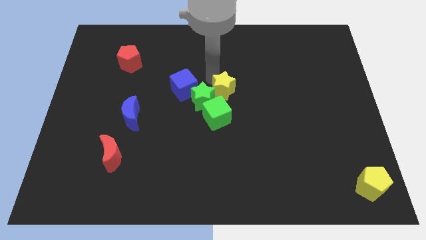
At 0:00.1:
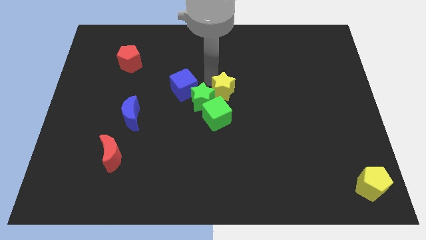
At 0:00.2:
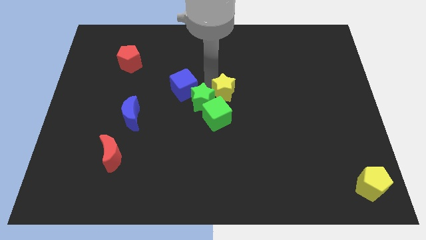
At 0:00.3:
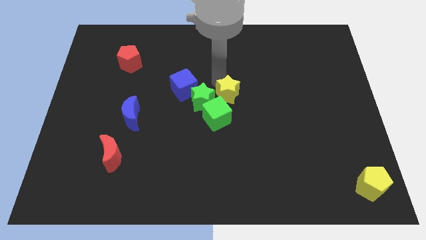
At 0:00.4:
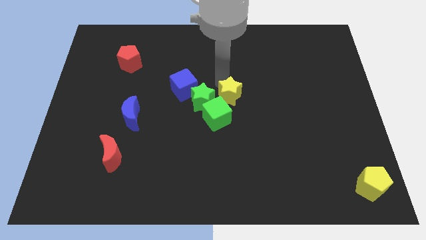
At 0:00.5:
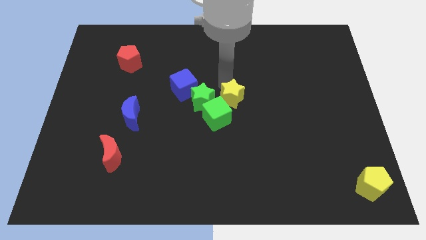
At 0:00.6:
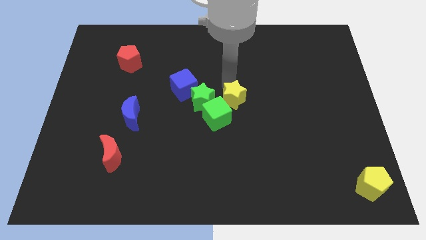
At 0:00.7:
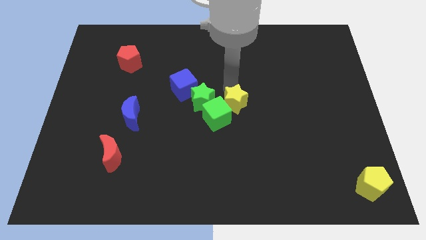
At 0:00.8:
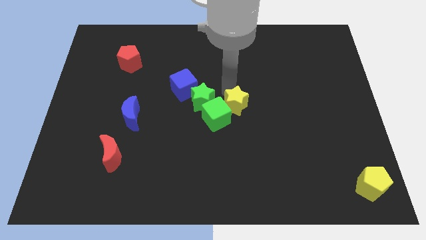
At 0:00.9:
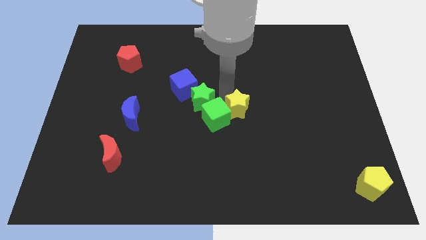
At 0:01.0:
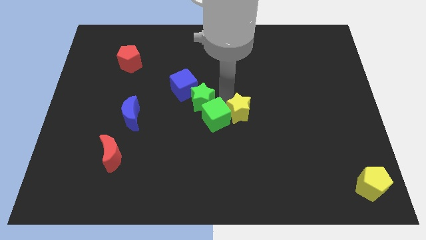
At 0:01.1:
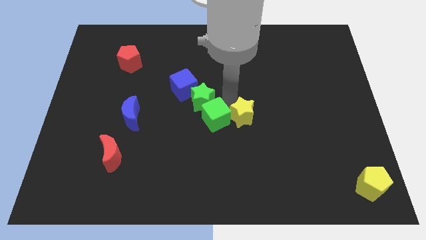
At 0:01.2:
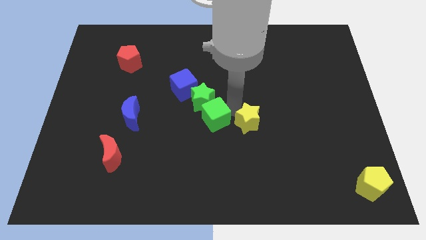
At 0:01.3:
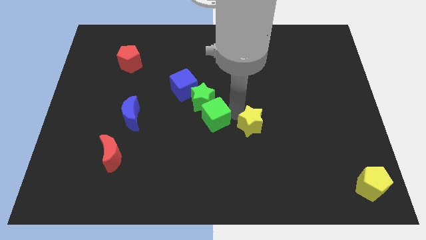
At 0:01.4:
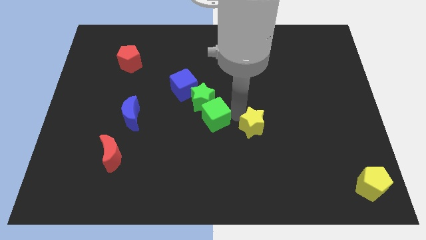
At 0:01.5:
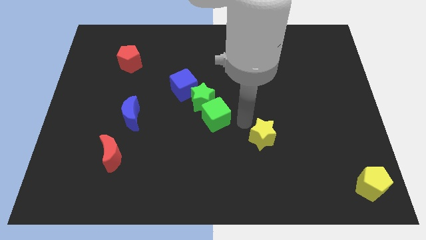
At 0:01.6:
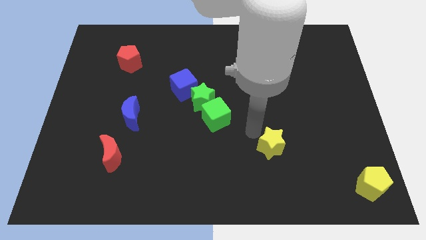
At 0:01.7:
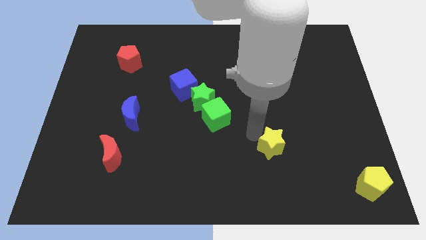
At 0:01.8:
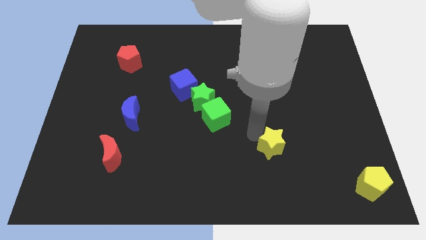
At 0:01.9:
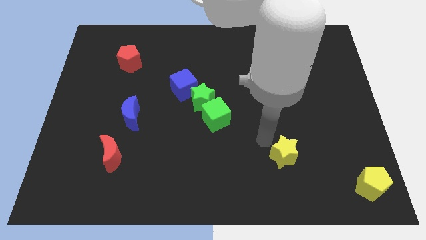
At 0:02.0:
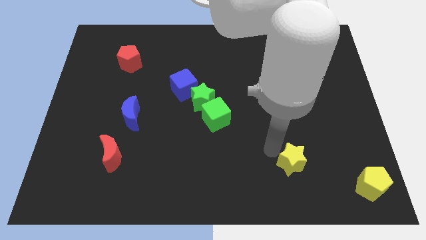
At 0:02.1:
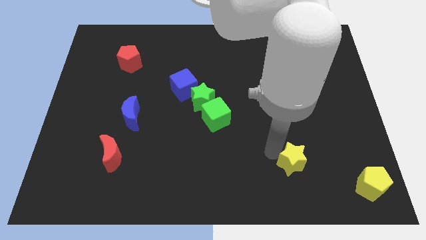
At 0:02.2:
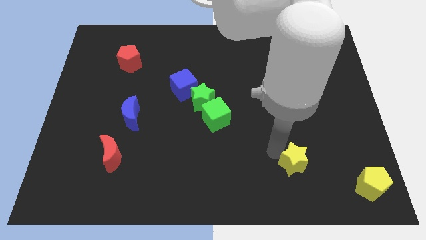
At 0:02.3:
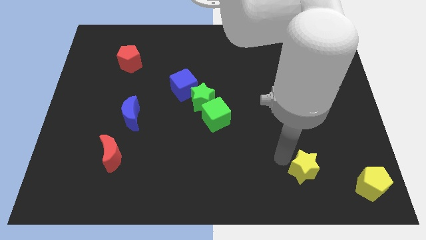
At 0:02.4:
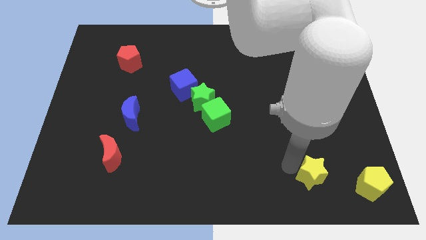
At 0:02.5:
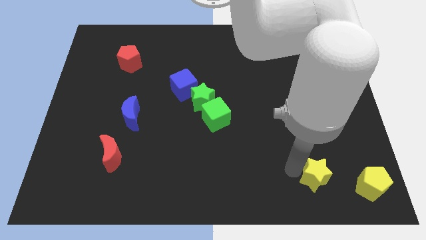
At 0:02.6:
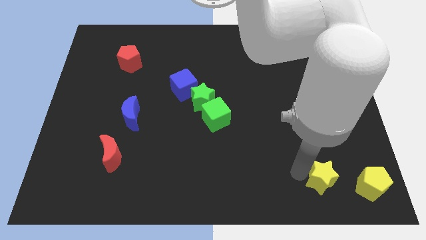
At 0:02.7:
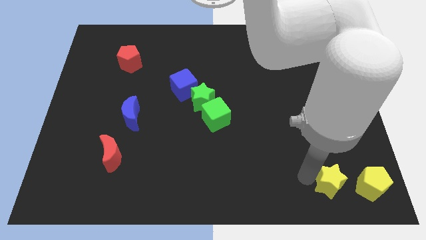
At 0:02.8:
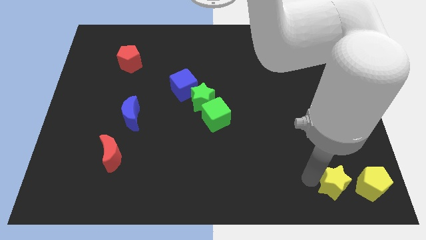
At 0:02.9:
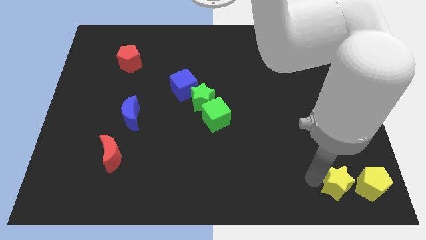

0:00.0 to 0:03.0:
push the yellow star towards the yellow pentagon

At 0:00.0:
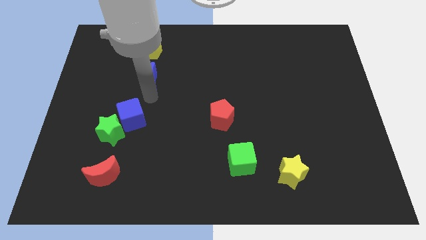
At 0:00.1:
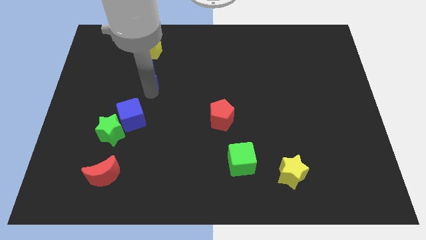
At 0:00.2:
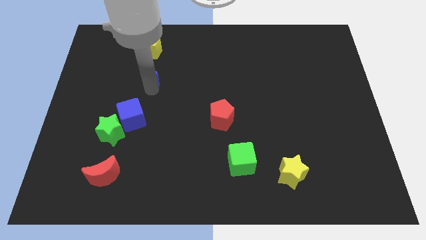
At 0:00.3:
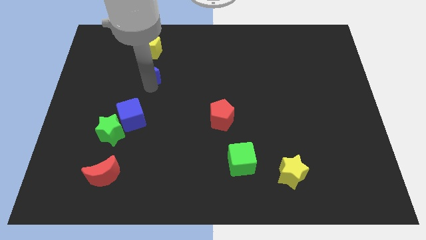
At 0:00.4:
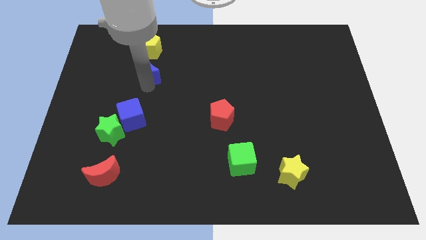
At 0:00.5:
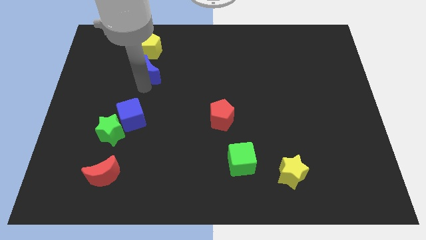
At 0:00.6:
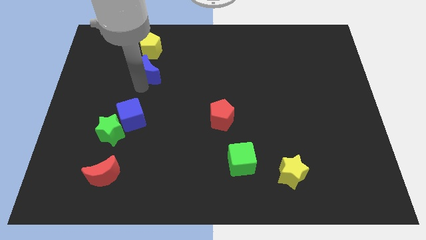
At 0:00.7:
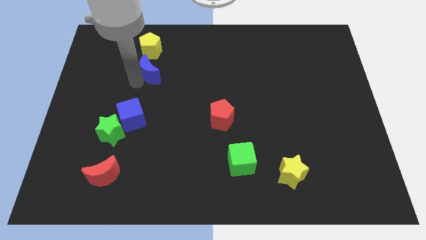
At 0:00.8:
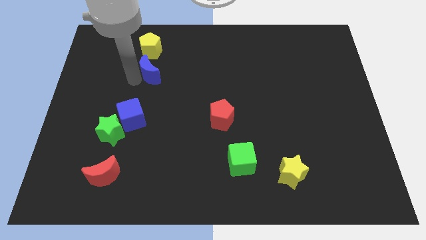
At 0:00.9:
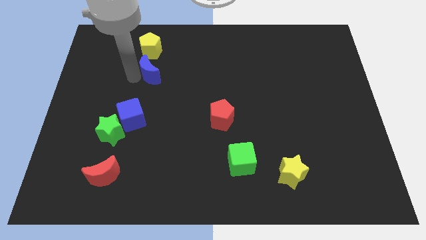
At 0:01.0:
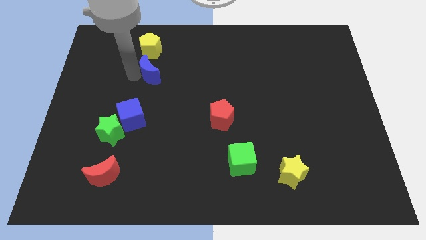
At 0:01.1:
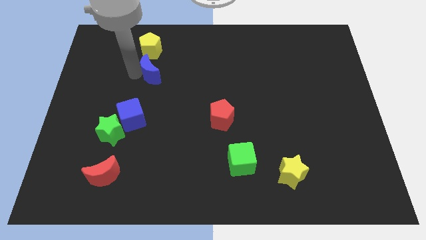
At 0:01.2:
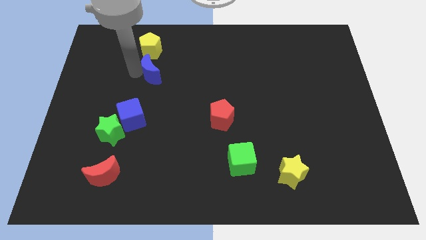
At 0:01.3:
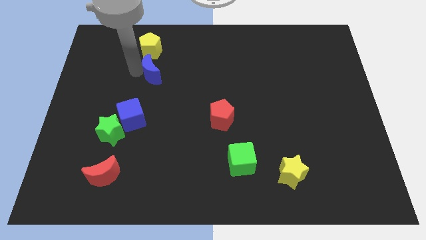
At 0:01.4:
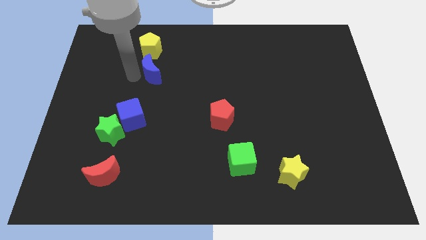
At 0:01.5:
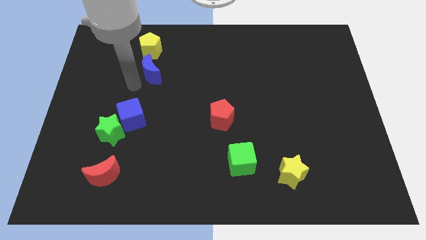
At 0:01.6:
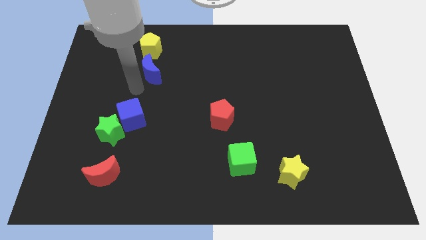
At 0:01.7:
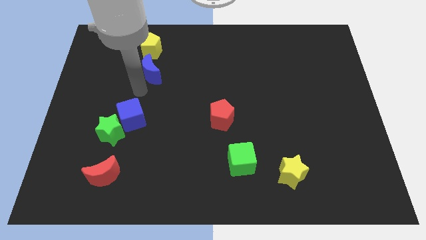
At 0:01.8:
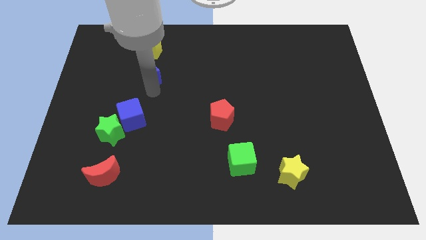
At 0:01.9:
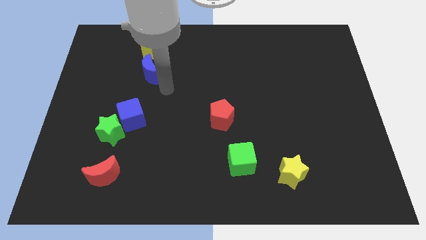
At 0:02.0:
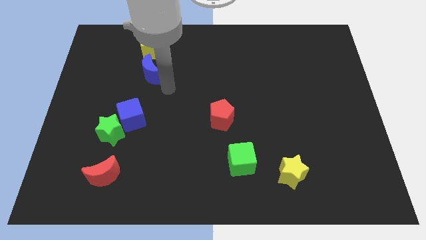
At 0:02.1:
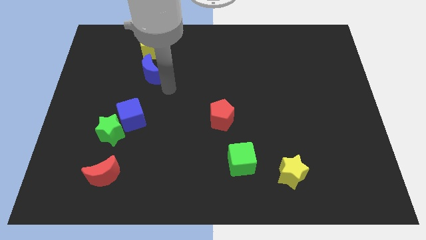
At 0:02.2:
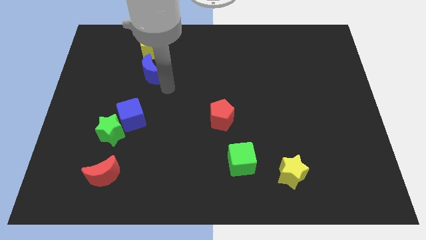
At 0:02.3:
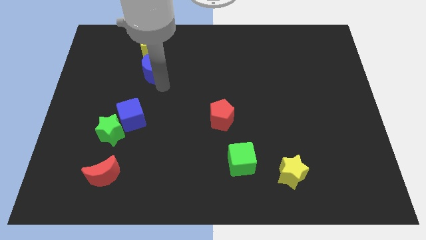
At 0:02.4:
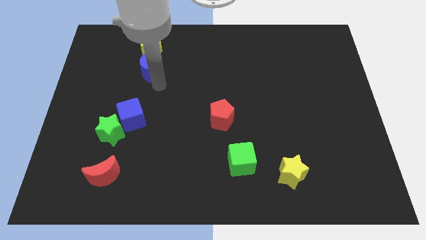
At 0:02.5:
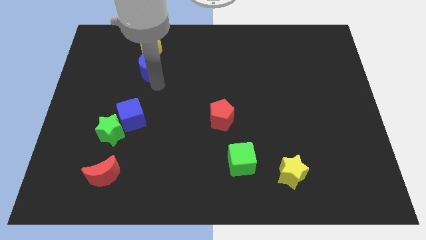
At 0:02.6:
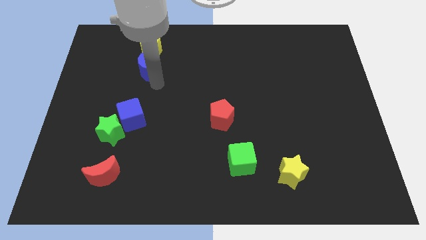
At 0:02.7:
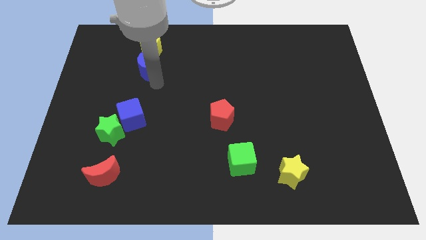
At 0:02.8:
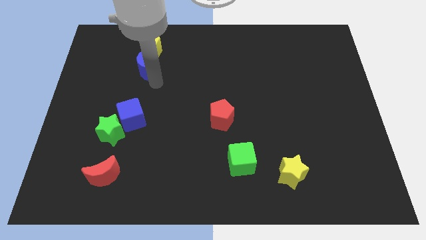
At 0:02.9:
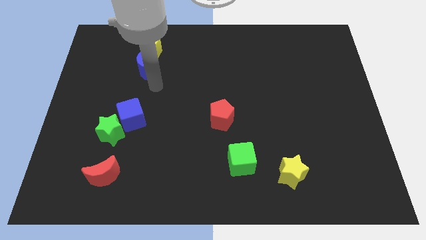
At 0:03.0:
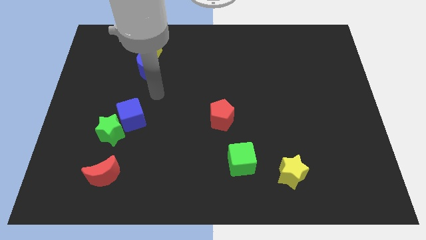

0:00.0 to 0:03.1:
slide blue moon into bottom of yellow pentagon

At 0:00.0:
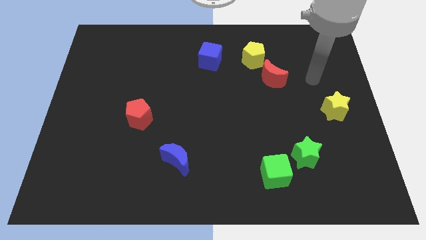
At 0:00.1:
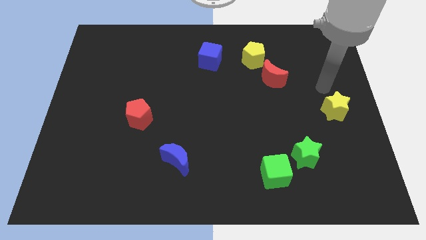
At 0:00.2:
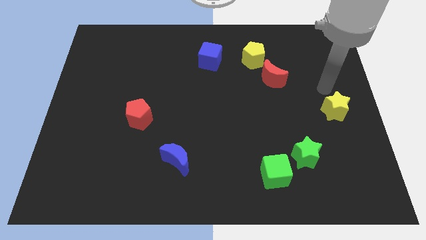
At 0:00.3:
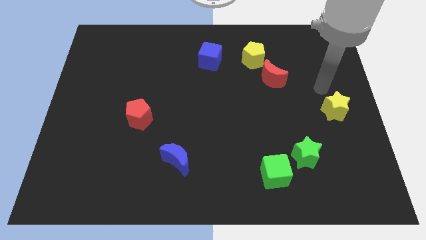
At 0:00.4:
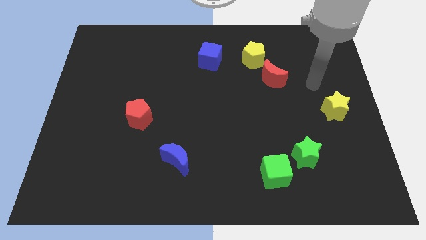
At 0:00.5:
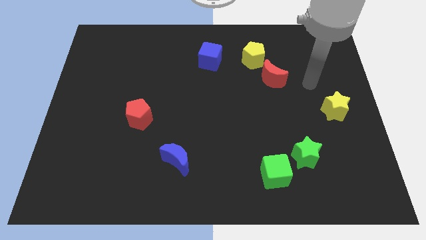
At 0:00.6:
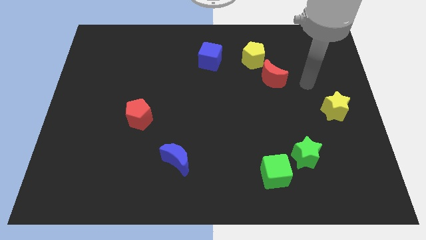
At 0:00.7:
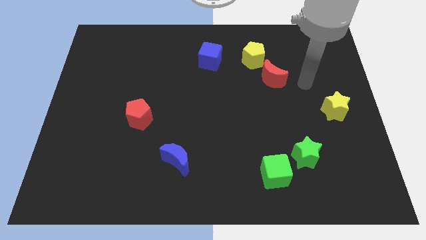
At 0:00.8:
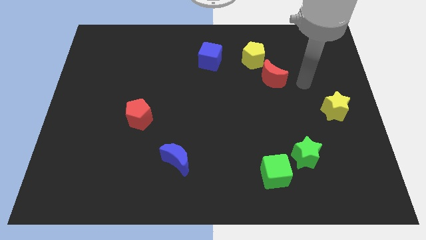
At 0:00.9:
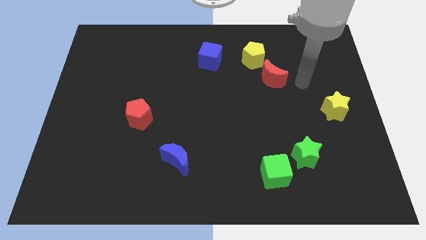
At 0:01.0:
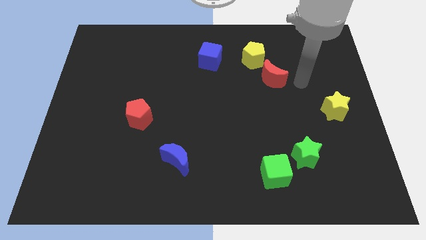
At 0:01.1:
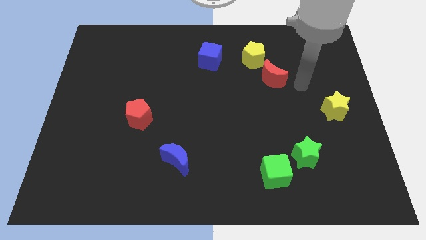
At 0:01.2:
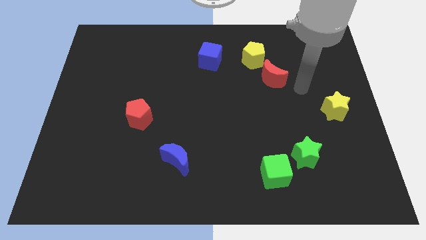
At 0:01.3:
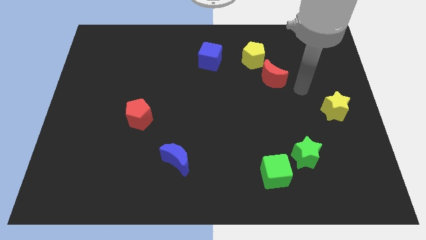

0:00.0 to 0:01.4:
point the arm in between the red moon and the yellow star

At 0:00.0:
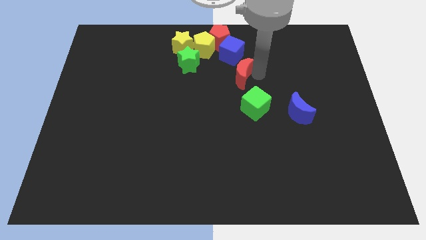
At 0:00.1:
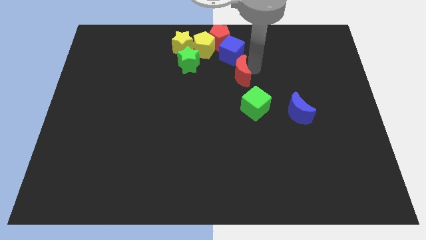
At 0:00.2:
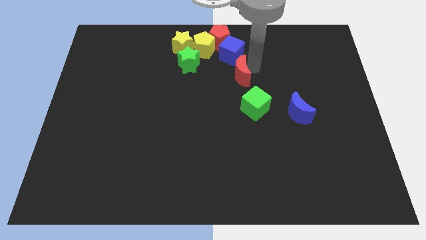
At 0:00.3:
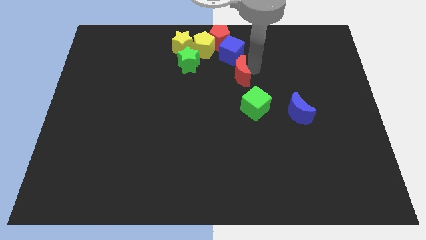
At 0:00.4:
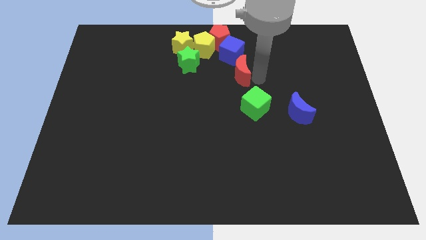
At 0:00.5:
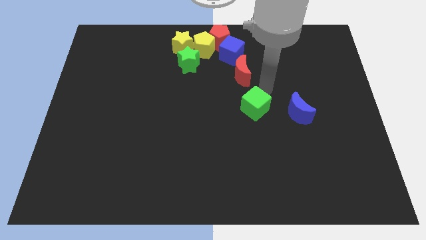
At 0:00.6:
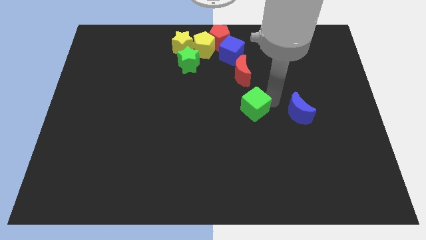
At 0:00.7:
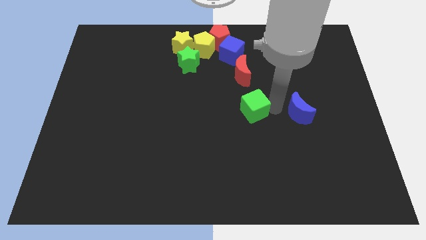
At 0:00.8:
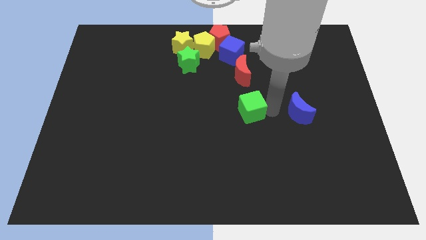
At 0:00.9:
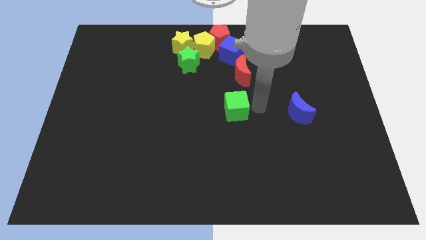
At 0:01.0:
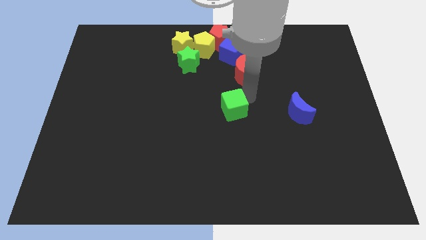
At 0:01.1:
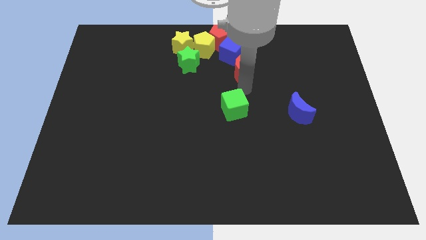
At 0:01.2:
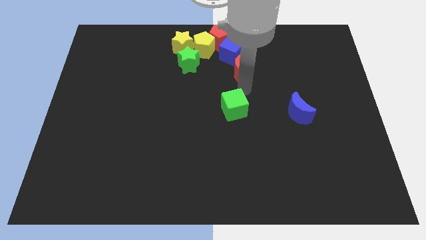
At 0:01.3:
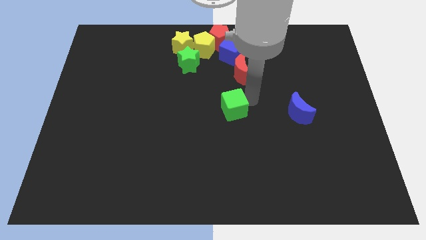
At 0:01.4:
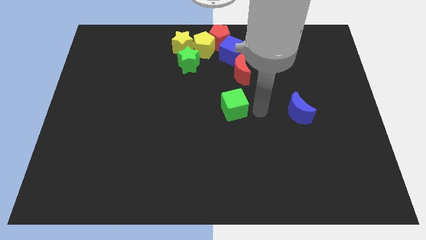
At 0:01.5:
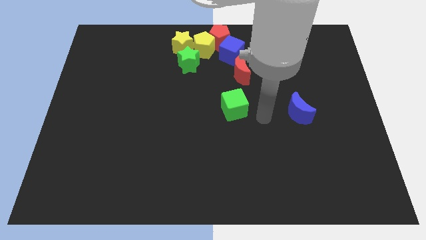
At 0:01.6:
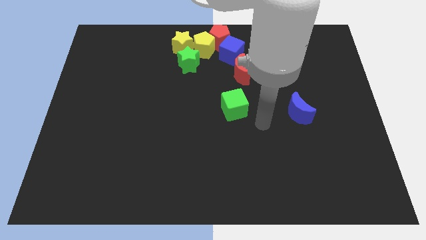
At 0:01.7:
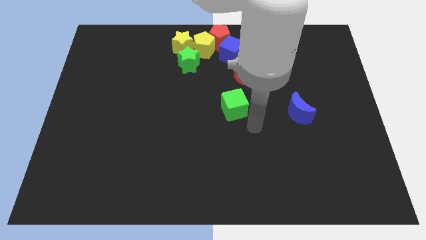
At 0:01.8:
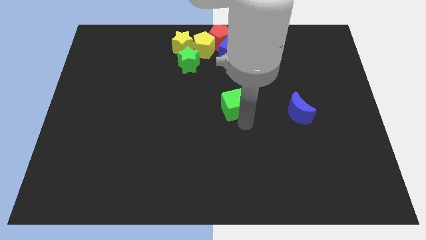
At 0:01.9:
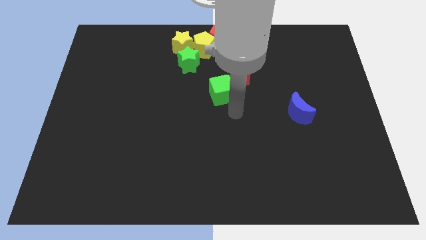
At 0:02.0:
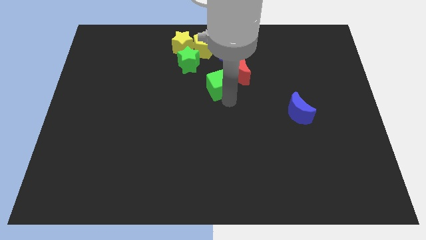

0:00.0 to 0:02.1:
slide the green cube towards the green star
